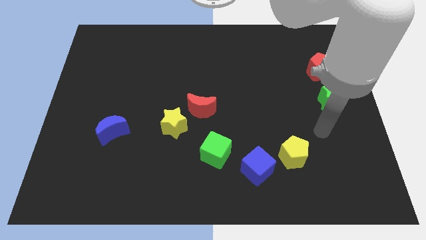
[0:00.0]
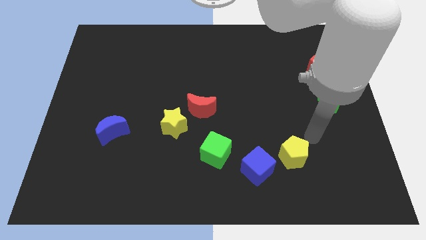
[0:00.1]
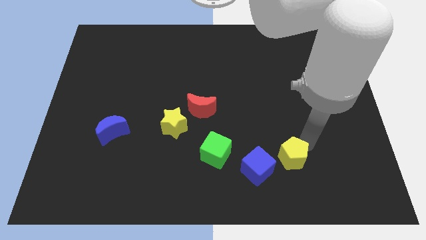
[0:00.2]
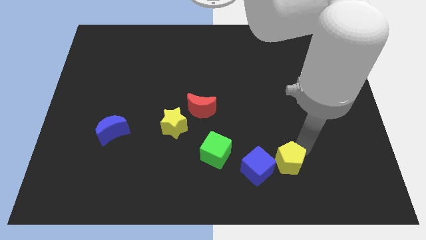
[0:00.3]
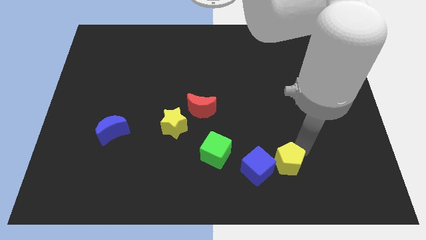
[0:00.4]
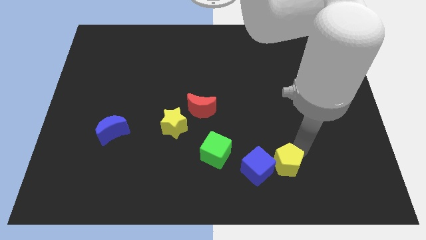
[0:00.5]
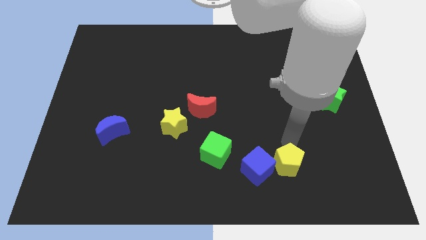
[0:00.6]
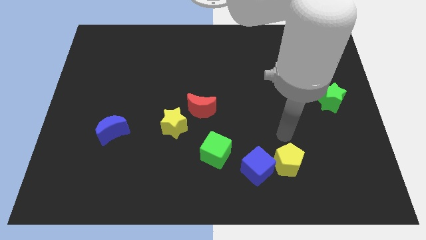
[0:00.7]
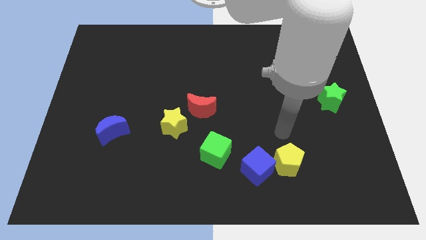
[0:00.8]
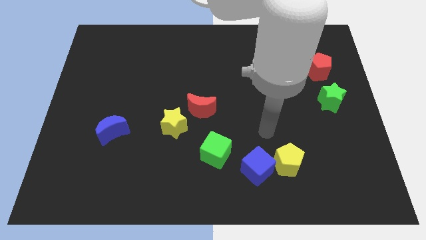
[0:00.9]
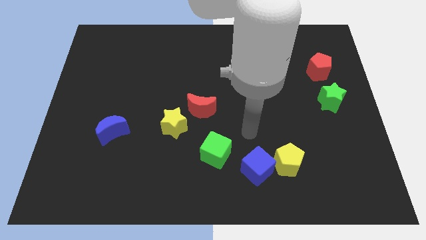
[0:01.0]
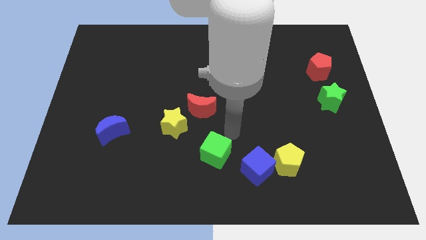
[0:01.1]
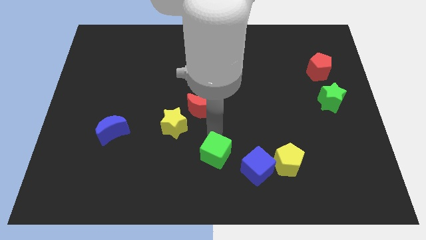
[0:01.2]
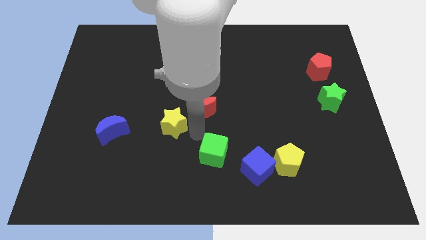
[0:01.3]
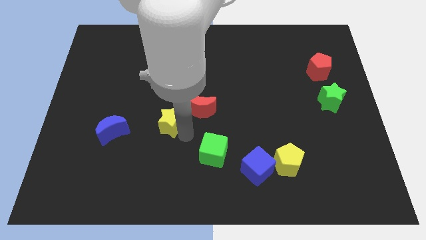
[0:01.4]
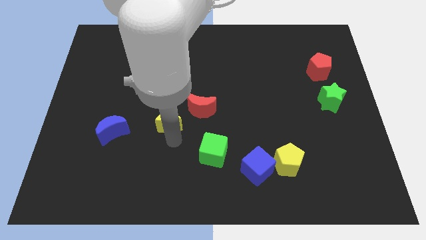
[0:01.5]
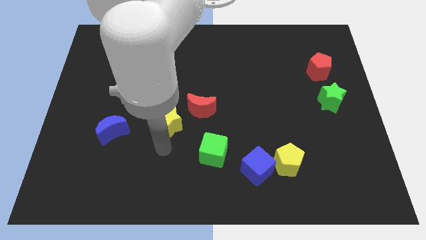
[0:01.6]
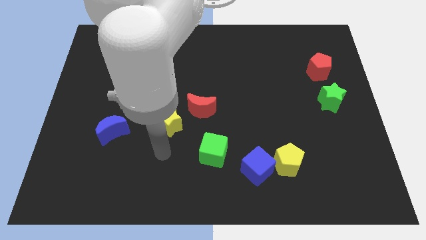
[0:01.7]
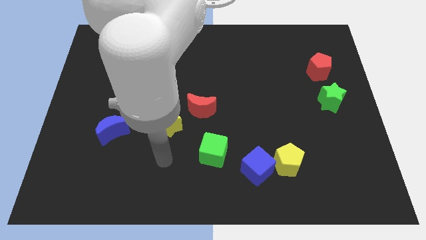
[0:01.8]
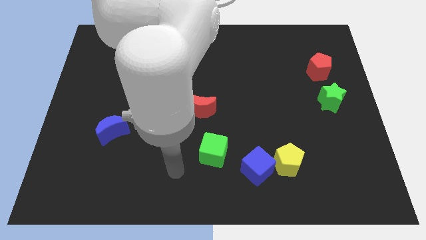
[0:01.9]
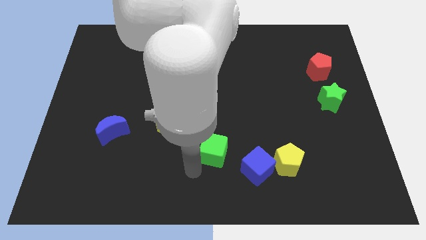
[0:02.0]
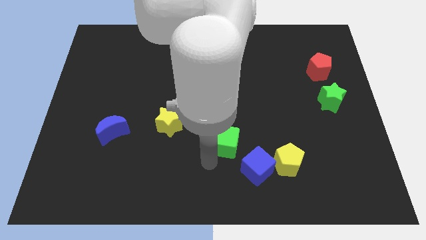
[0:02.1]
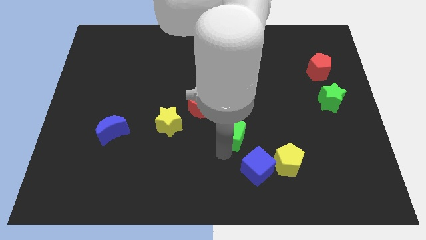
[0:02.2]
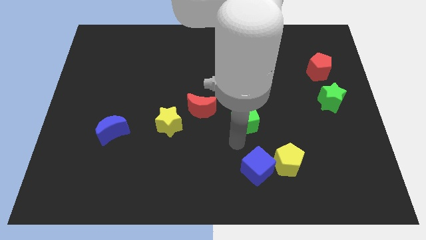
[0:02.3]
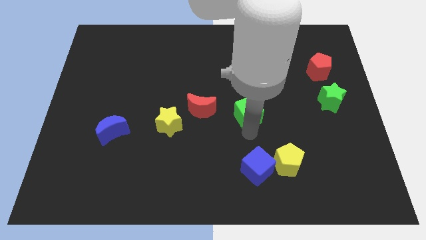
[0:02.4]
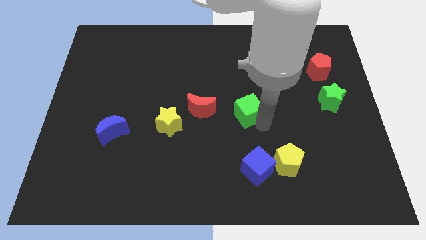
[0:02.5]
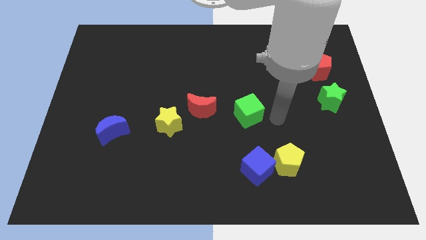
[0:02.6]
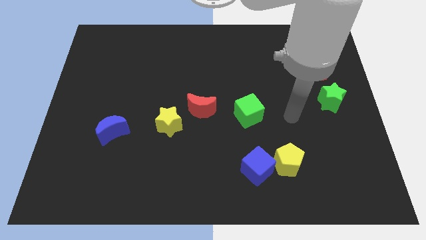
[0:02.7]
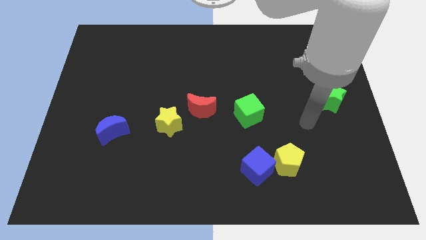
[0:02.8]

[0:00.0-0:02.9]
place the green cube to the right of the red crescent

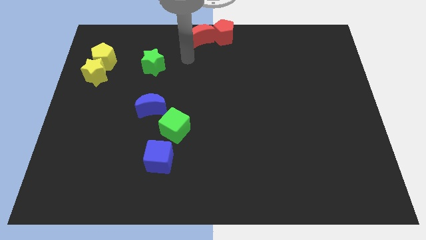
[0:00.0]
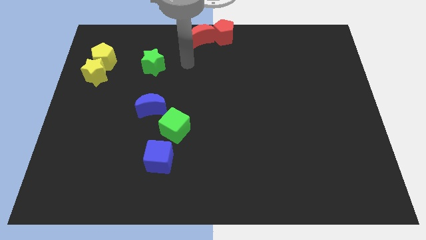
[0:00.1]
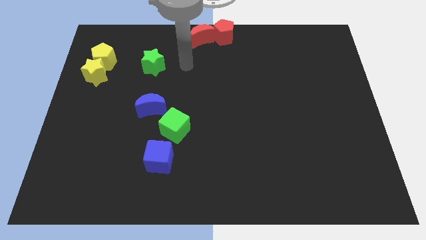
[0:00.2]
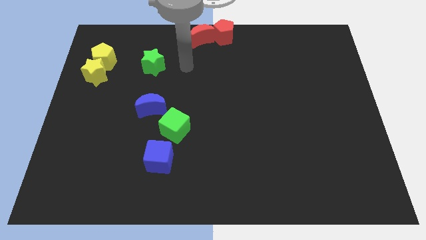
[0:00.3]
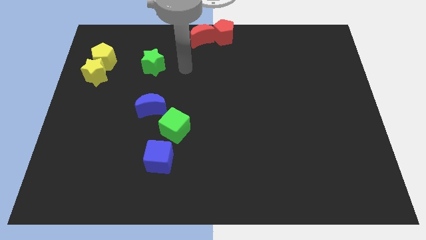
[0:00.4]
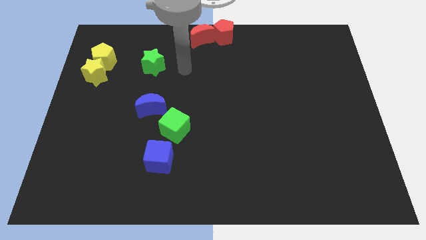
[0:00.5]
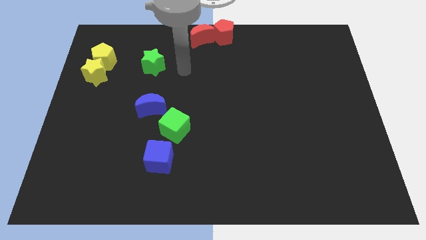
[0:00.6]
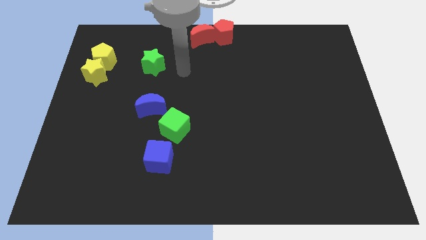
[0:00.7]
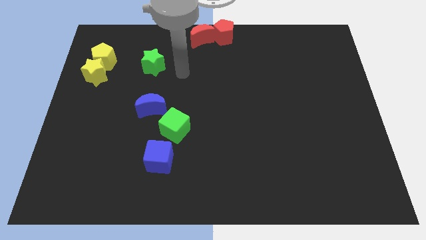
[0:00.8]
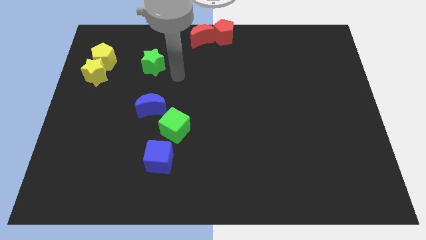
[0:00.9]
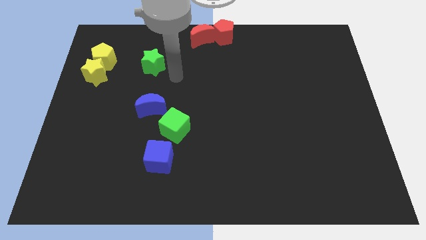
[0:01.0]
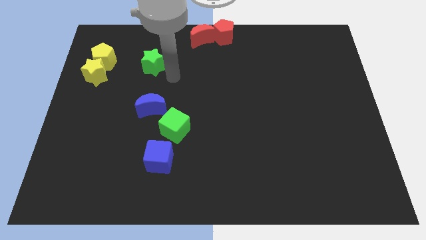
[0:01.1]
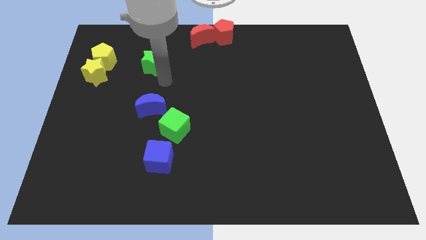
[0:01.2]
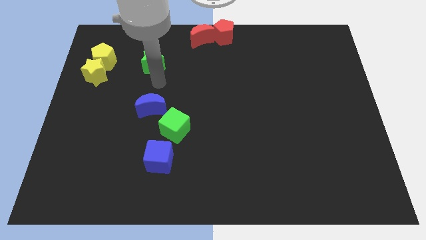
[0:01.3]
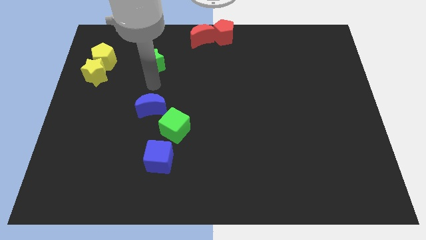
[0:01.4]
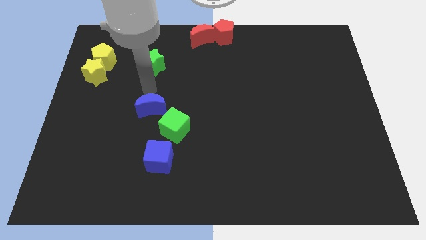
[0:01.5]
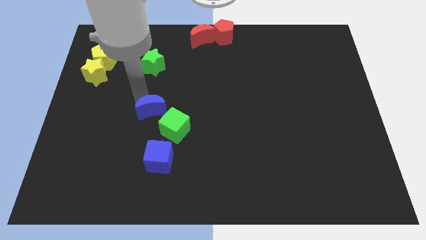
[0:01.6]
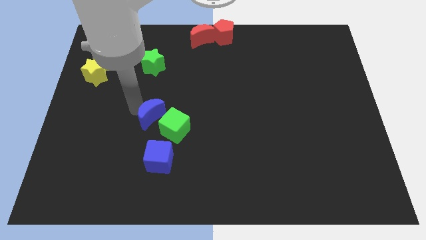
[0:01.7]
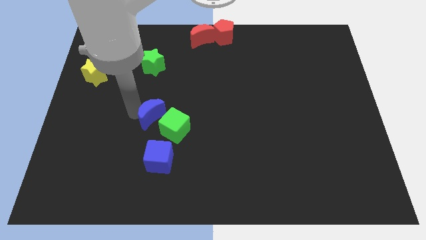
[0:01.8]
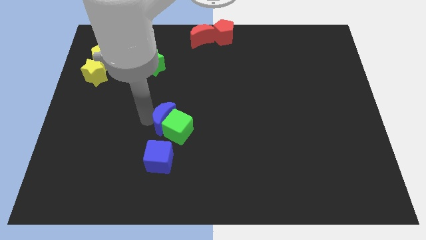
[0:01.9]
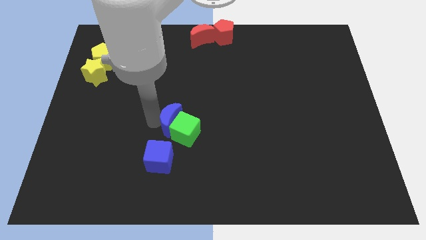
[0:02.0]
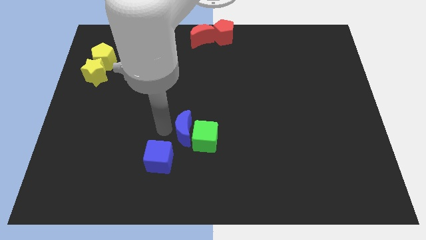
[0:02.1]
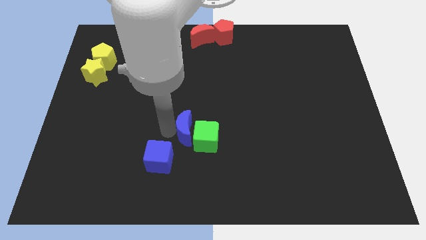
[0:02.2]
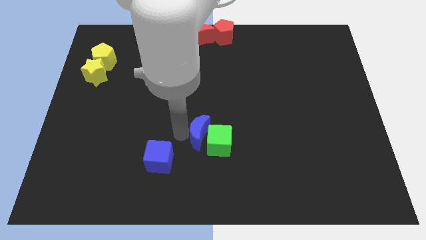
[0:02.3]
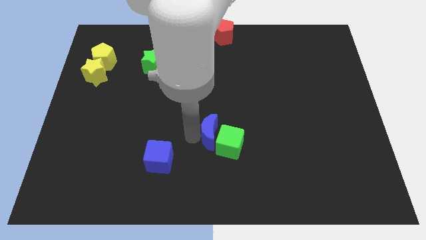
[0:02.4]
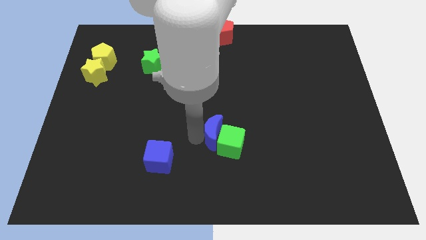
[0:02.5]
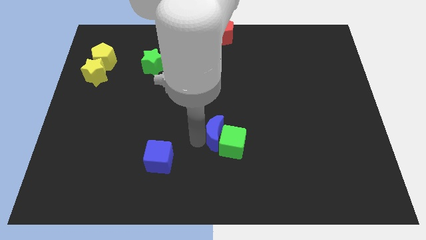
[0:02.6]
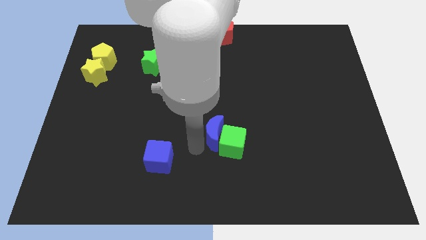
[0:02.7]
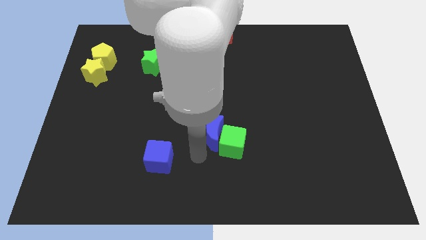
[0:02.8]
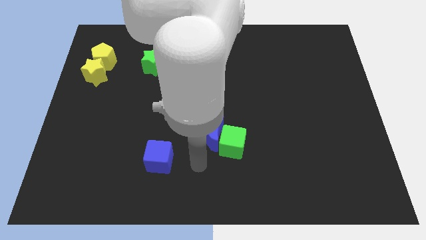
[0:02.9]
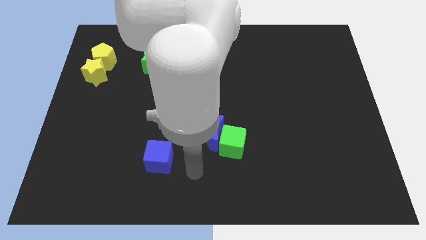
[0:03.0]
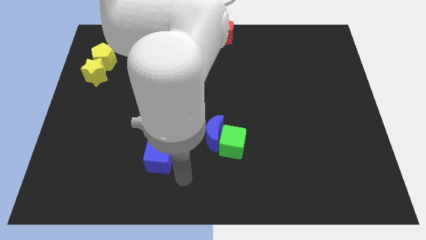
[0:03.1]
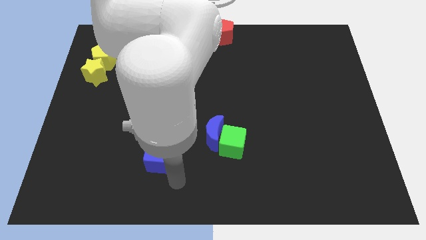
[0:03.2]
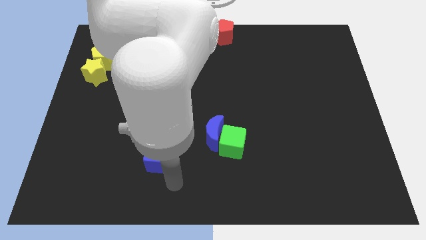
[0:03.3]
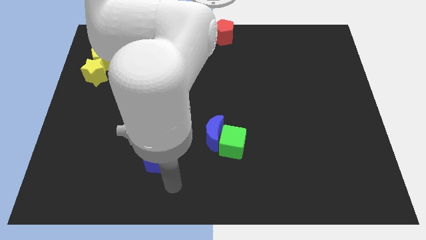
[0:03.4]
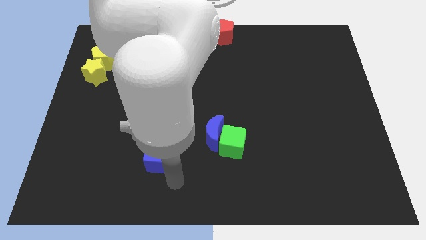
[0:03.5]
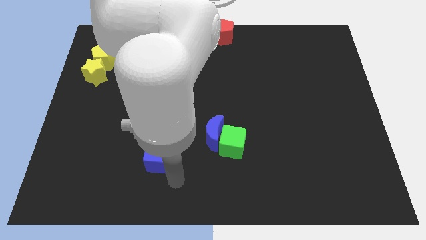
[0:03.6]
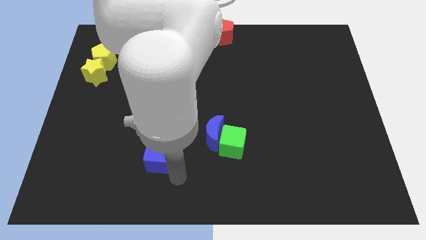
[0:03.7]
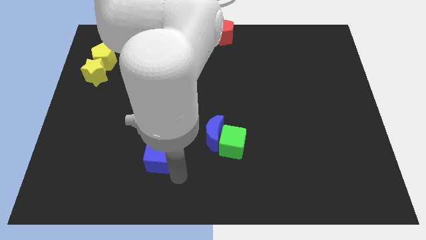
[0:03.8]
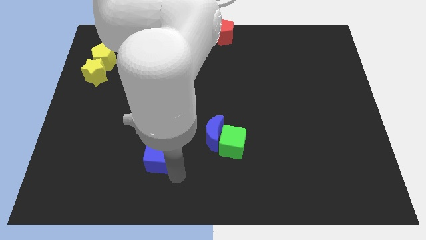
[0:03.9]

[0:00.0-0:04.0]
push the blue moon into the green cube

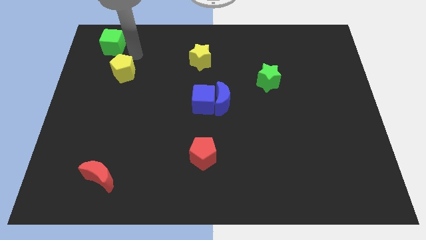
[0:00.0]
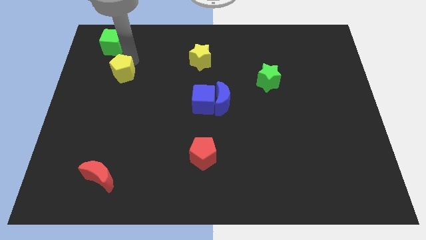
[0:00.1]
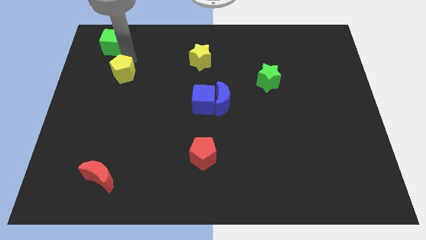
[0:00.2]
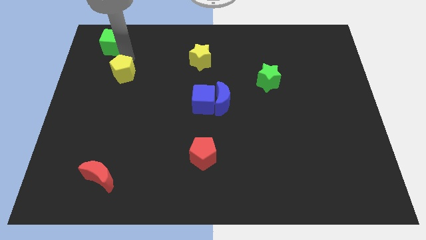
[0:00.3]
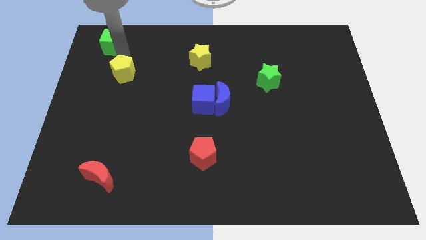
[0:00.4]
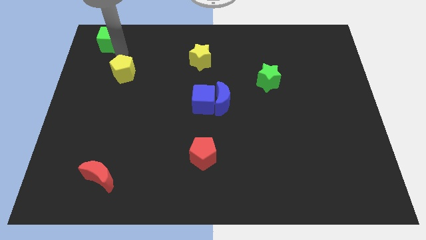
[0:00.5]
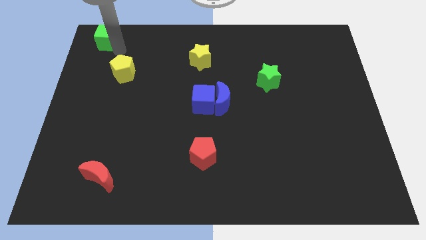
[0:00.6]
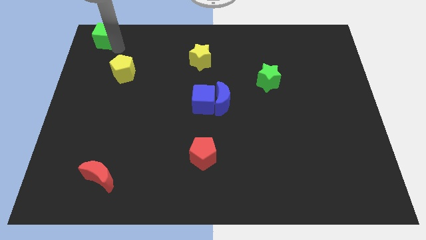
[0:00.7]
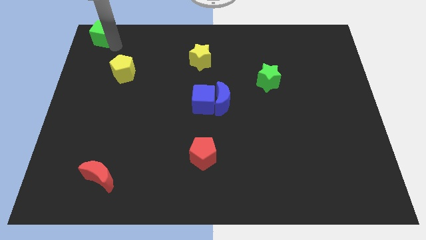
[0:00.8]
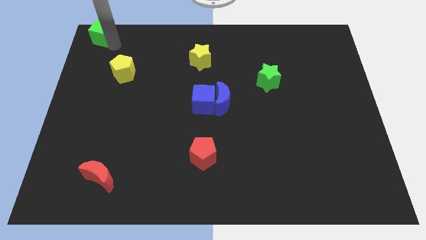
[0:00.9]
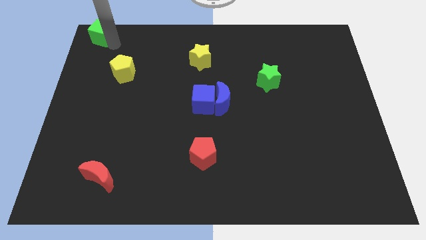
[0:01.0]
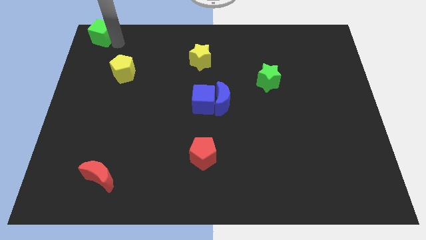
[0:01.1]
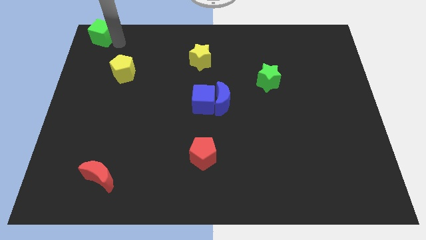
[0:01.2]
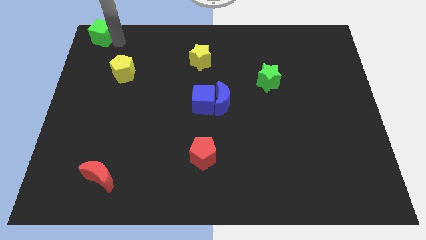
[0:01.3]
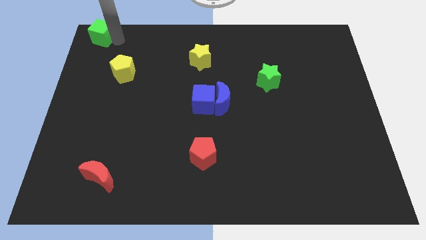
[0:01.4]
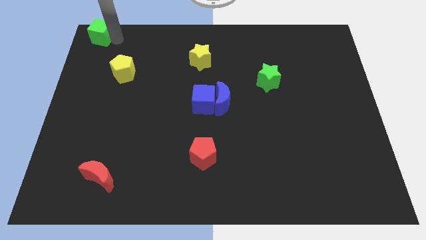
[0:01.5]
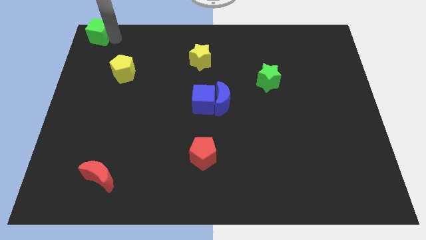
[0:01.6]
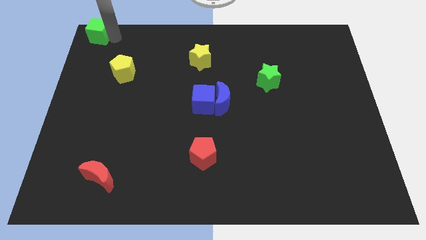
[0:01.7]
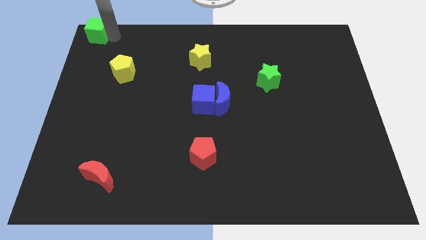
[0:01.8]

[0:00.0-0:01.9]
place the green cube to the top left corner of the board

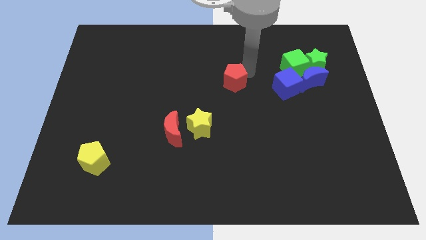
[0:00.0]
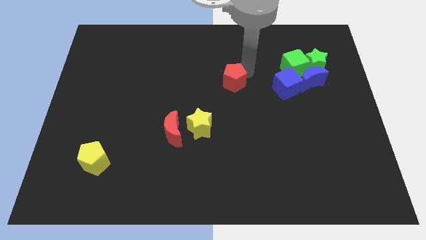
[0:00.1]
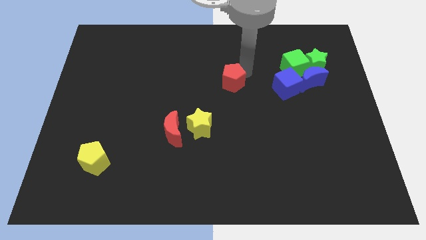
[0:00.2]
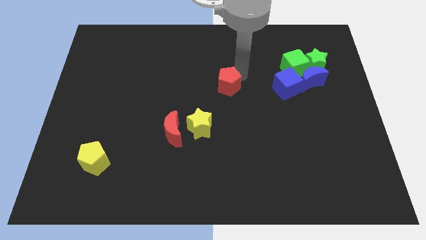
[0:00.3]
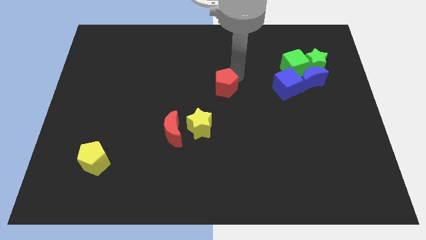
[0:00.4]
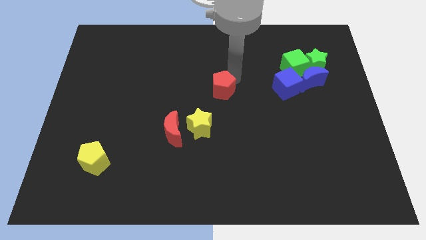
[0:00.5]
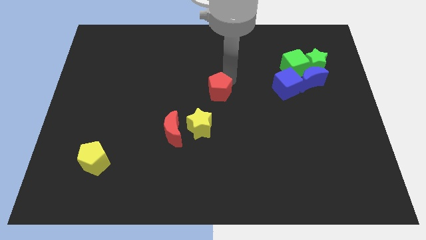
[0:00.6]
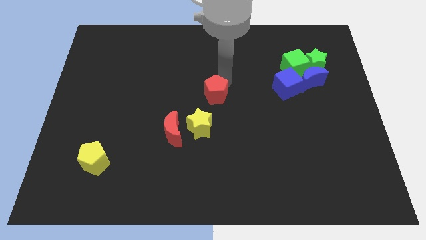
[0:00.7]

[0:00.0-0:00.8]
place the red pentagon diagonal to the red crescent
